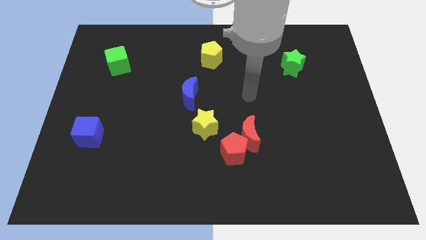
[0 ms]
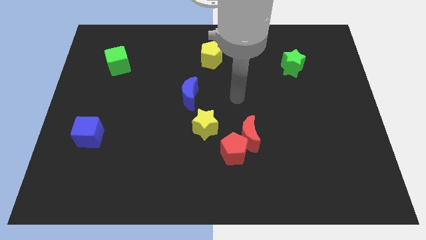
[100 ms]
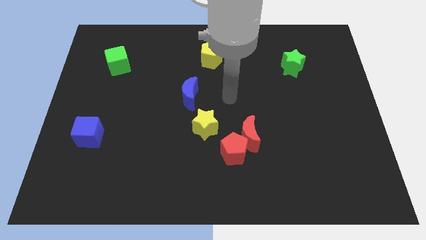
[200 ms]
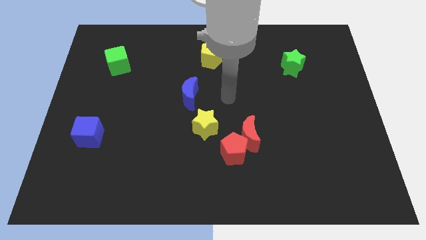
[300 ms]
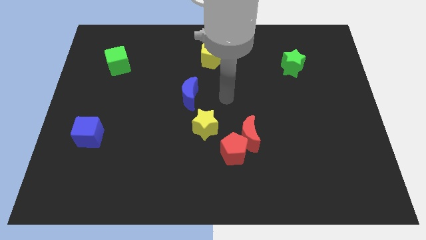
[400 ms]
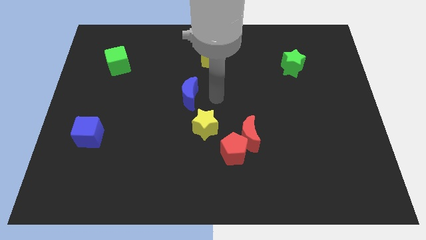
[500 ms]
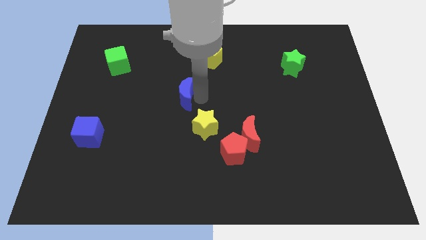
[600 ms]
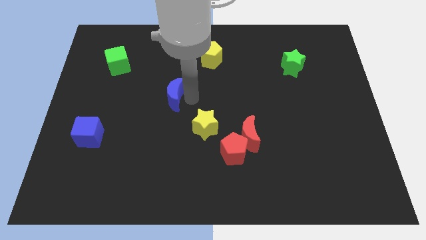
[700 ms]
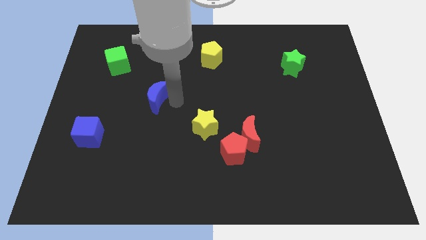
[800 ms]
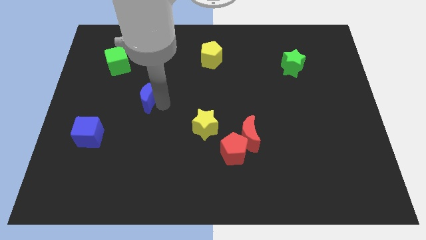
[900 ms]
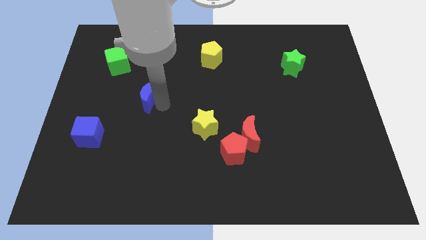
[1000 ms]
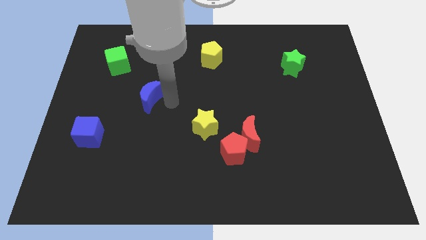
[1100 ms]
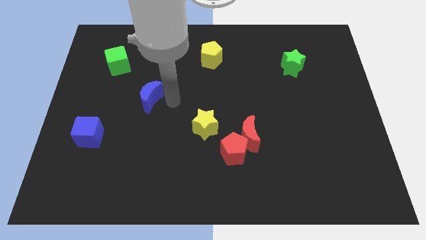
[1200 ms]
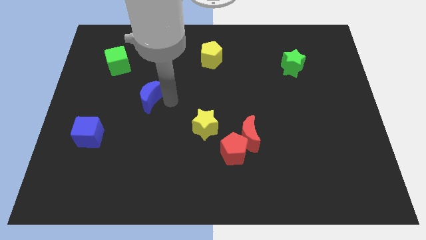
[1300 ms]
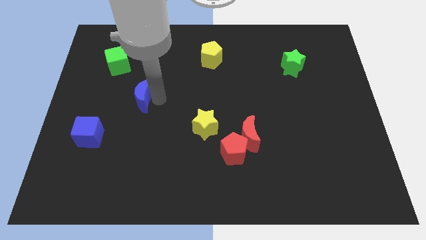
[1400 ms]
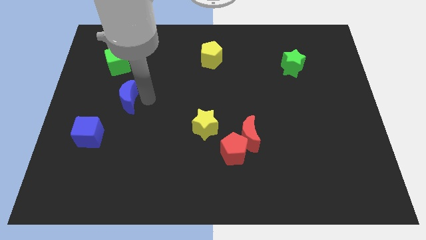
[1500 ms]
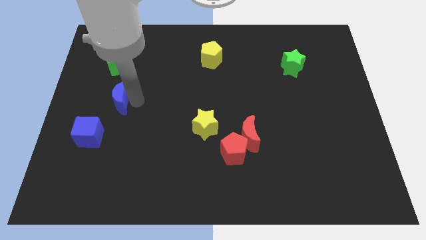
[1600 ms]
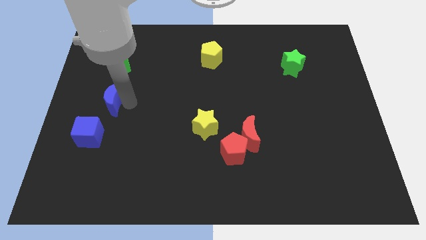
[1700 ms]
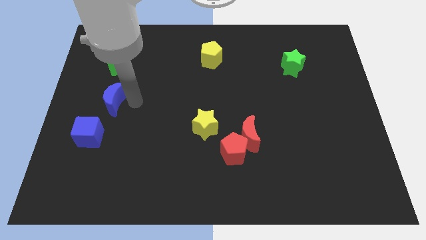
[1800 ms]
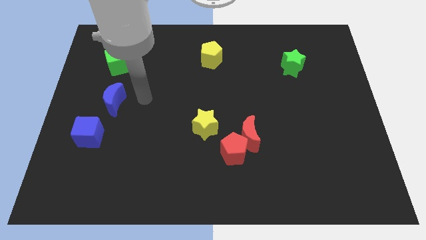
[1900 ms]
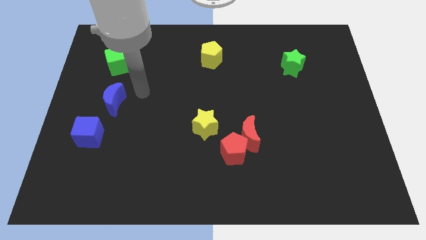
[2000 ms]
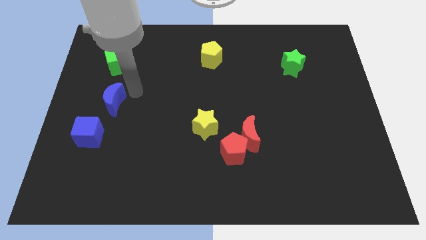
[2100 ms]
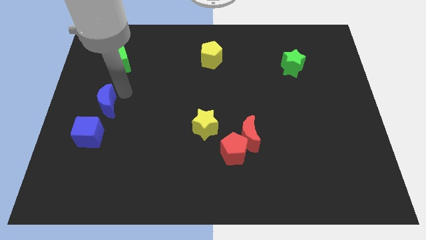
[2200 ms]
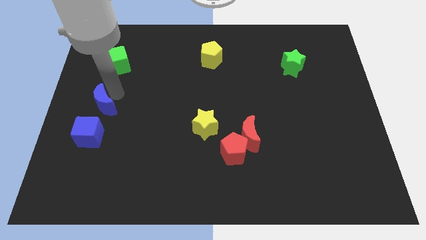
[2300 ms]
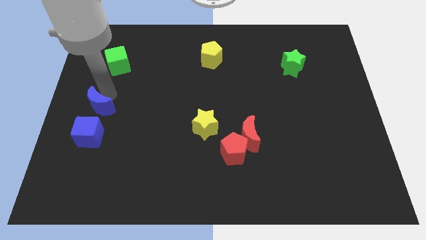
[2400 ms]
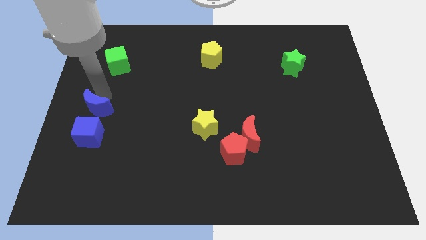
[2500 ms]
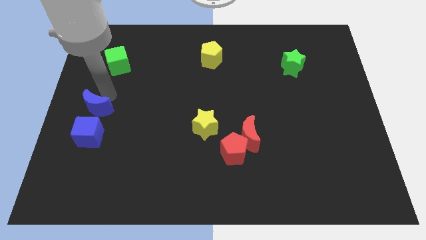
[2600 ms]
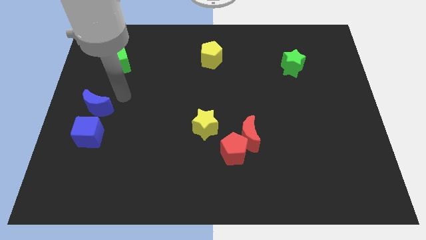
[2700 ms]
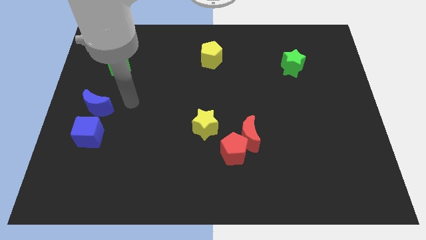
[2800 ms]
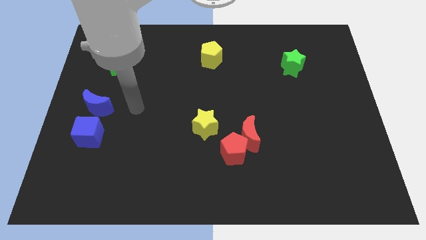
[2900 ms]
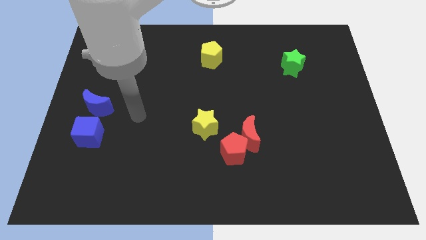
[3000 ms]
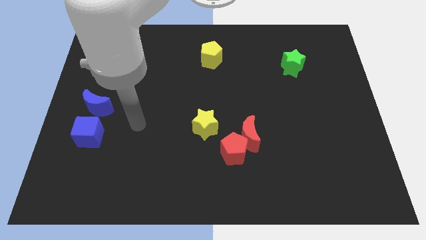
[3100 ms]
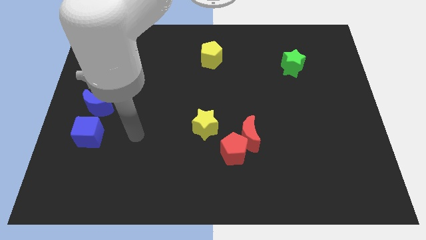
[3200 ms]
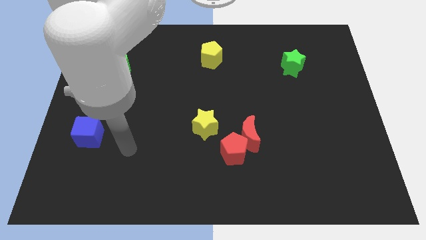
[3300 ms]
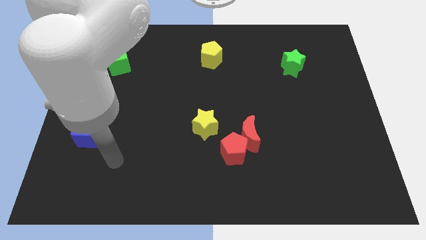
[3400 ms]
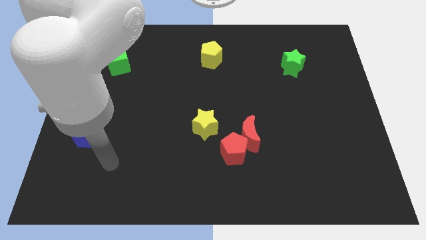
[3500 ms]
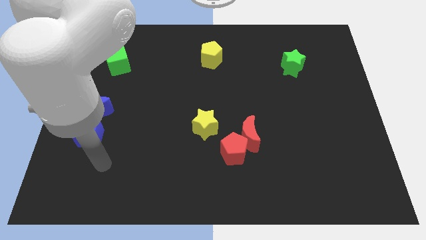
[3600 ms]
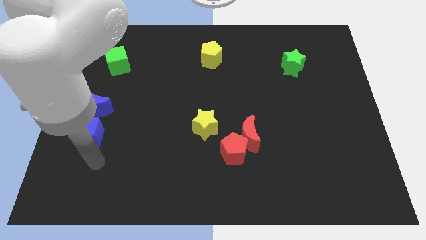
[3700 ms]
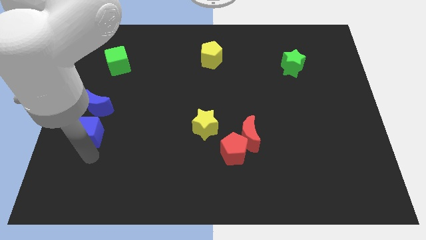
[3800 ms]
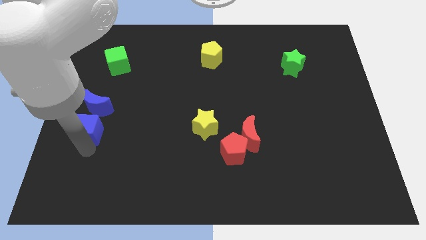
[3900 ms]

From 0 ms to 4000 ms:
place the blue moon above the blue cube

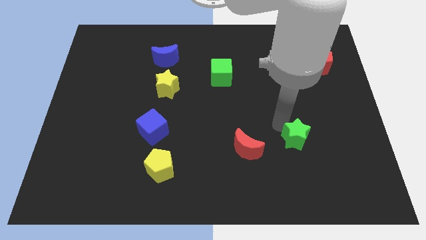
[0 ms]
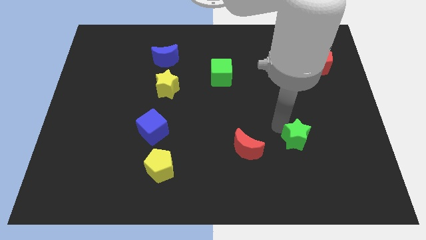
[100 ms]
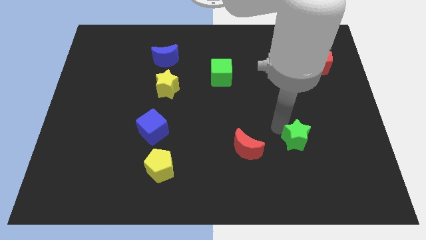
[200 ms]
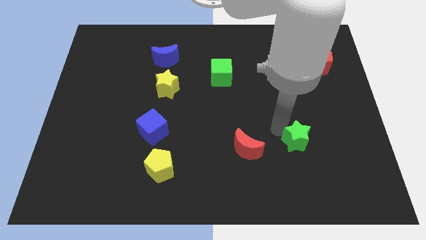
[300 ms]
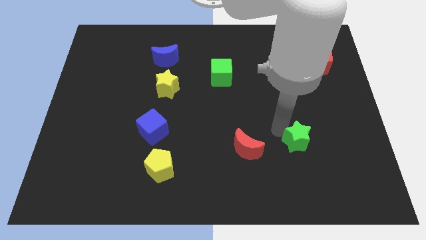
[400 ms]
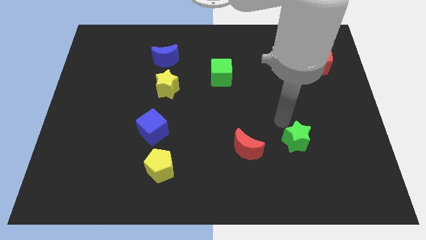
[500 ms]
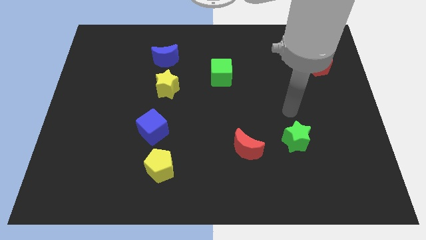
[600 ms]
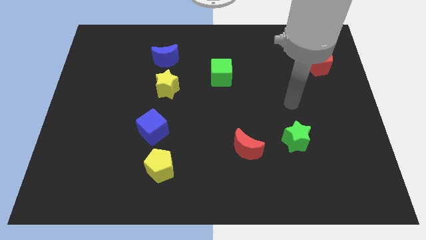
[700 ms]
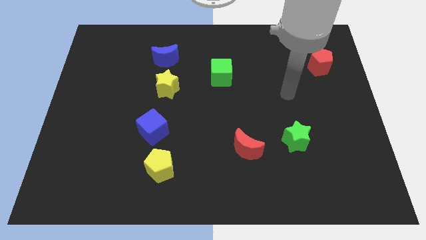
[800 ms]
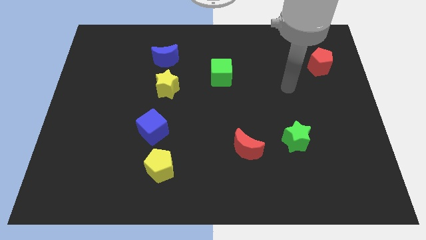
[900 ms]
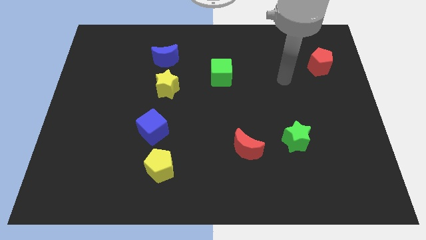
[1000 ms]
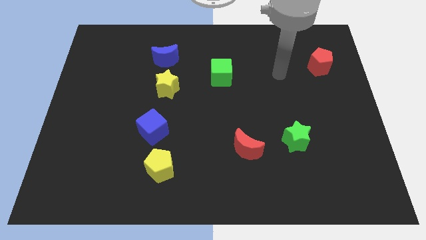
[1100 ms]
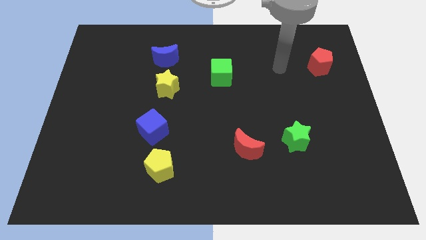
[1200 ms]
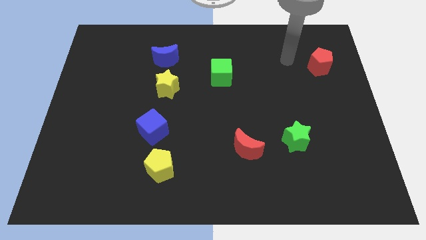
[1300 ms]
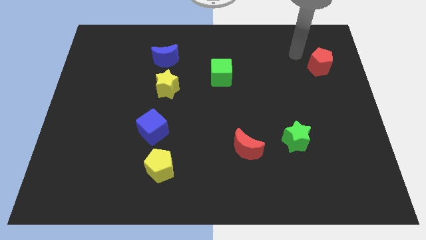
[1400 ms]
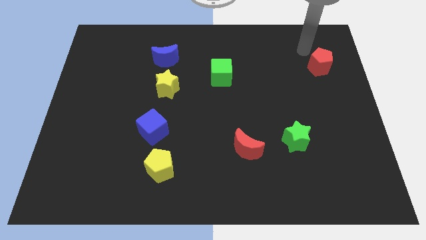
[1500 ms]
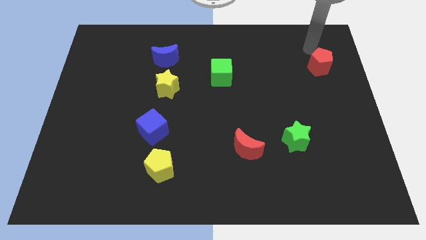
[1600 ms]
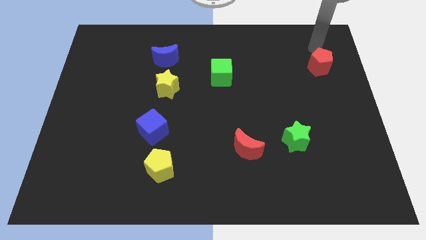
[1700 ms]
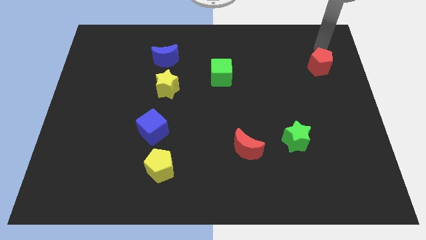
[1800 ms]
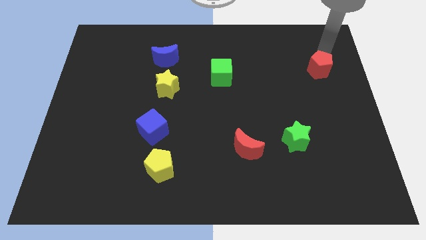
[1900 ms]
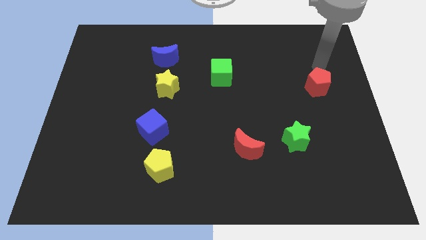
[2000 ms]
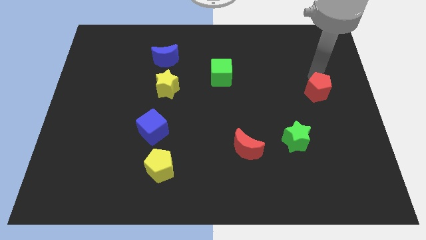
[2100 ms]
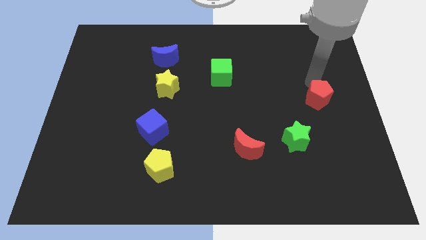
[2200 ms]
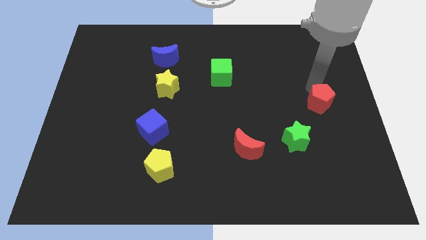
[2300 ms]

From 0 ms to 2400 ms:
push red pentagon slightly towards down

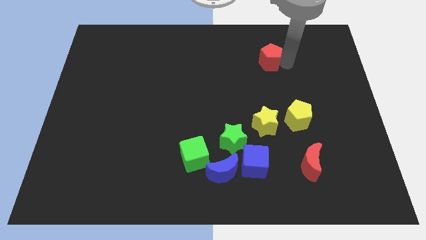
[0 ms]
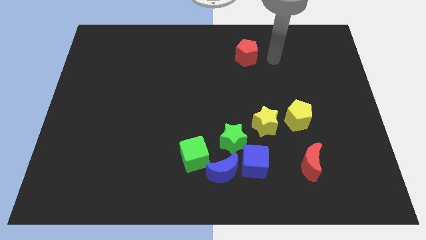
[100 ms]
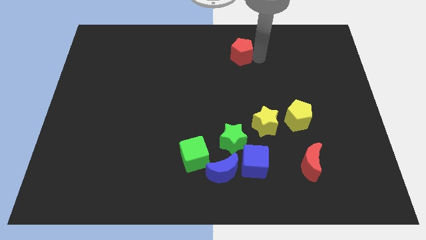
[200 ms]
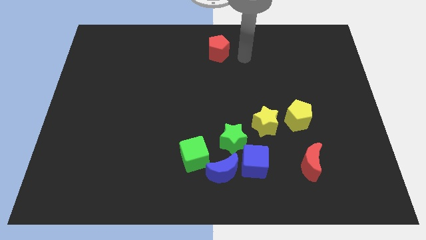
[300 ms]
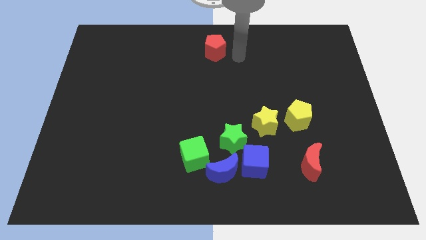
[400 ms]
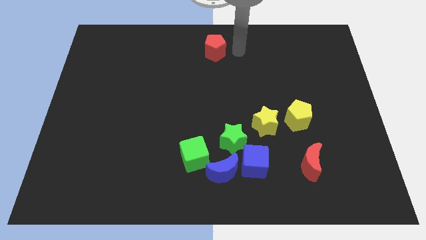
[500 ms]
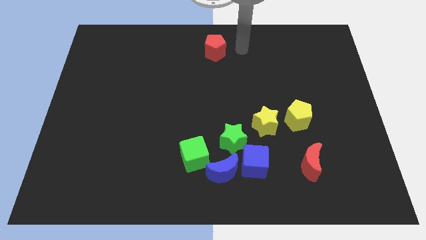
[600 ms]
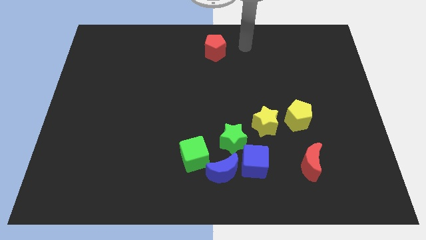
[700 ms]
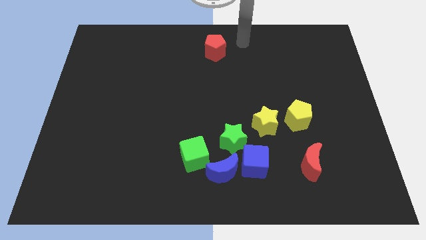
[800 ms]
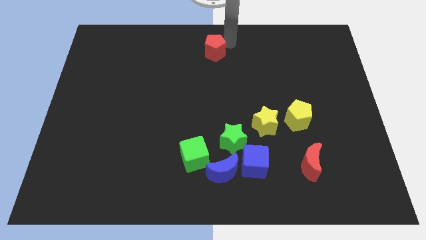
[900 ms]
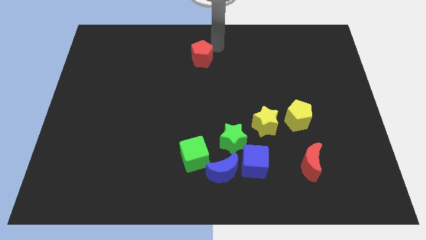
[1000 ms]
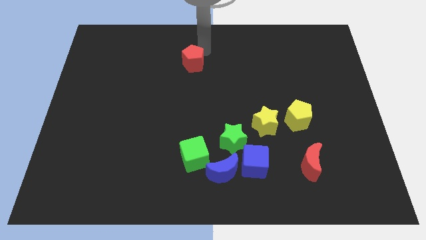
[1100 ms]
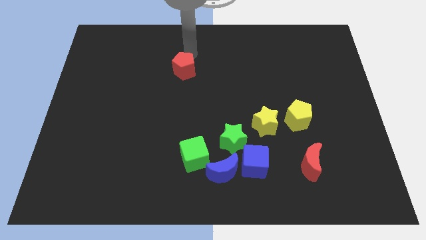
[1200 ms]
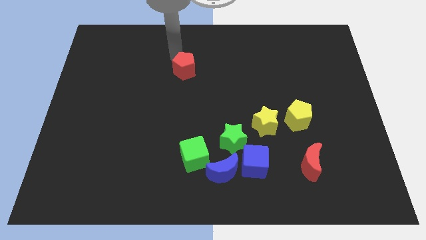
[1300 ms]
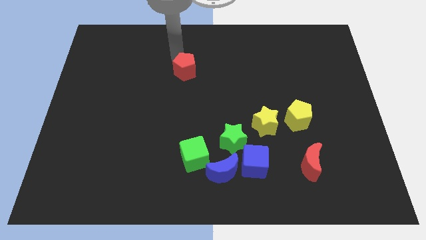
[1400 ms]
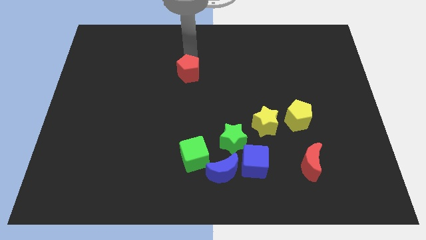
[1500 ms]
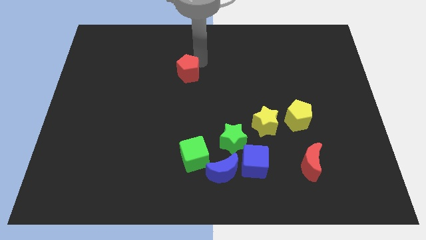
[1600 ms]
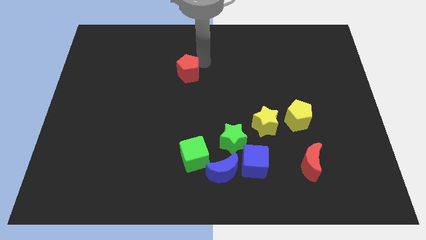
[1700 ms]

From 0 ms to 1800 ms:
slide the red pentagon towards the left side

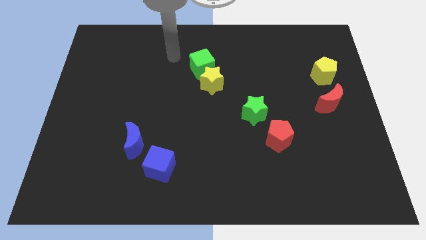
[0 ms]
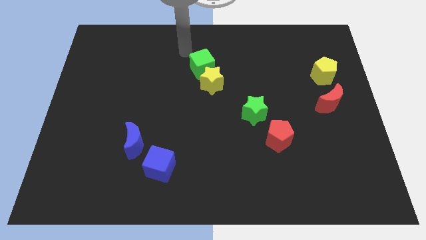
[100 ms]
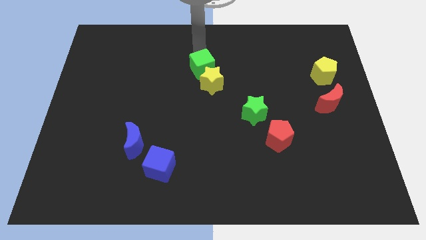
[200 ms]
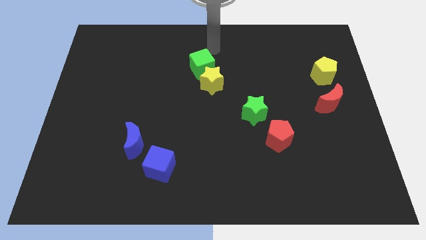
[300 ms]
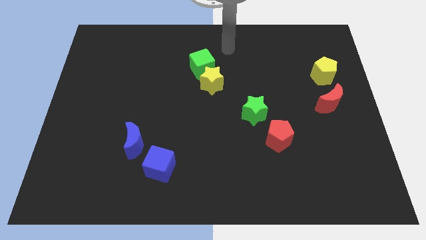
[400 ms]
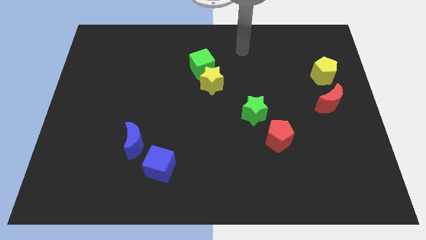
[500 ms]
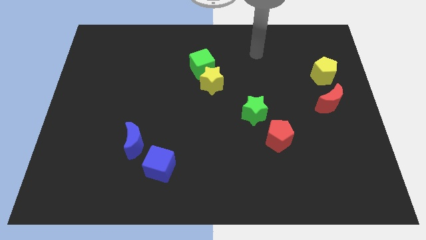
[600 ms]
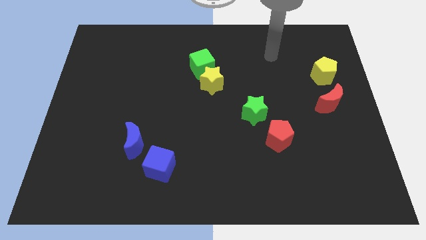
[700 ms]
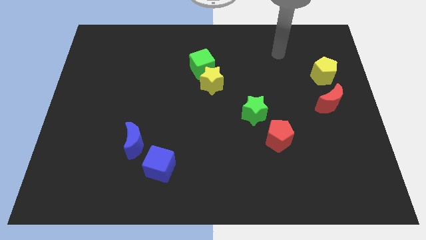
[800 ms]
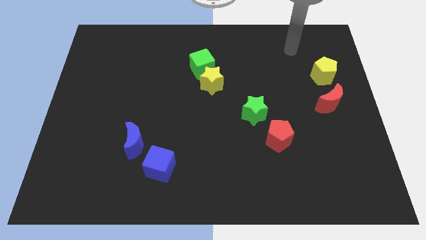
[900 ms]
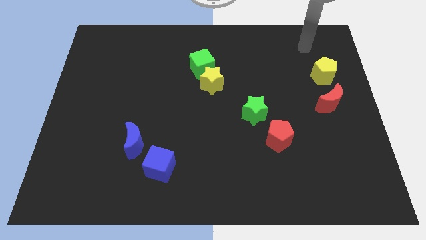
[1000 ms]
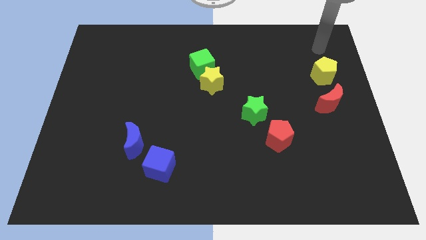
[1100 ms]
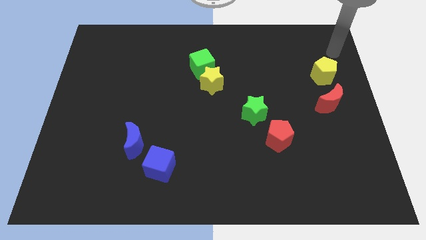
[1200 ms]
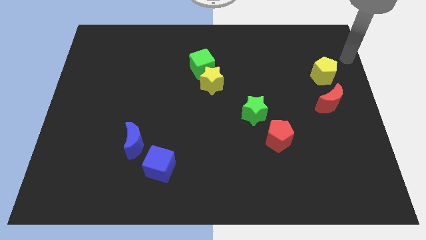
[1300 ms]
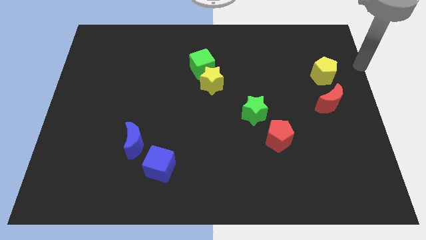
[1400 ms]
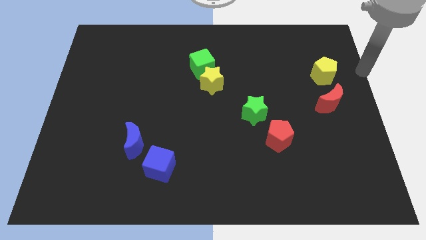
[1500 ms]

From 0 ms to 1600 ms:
move your arm away from the green cube
